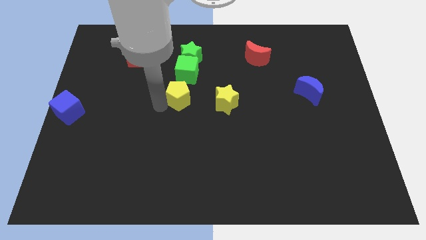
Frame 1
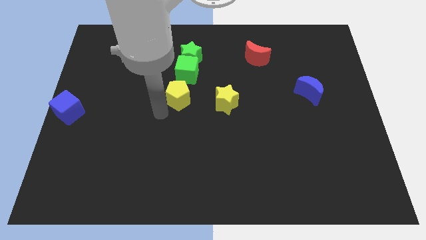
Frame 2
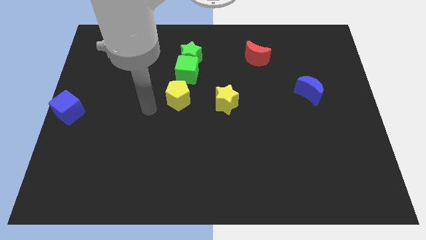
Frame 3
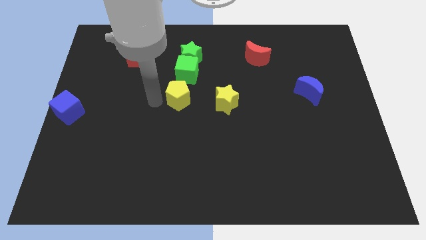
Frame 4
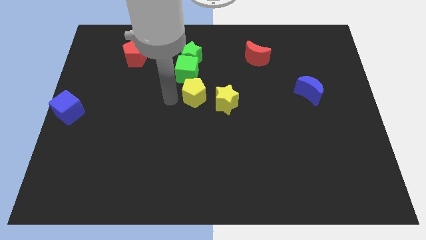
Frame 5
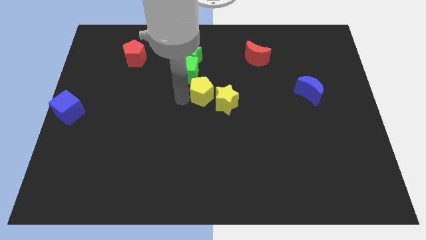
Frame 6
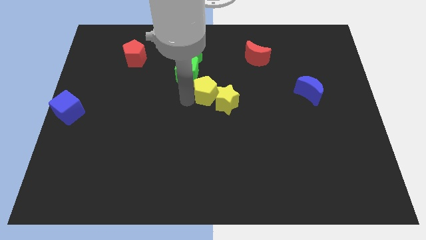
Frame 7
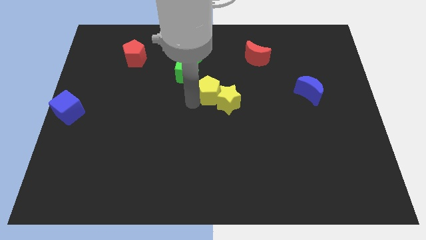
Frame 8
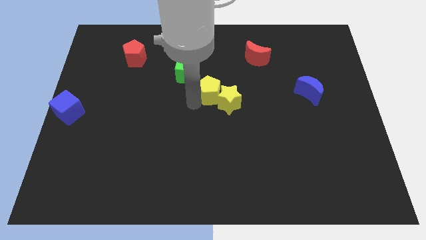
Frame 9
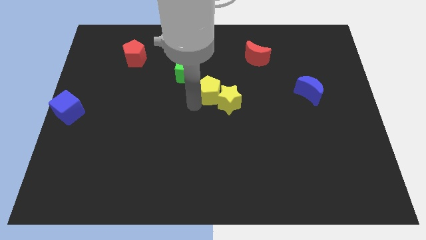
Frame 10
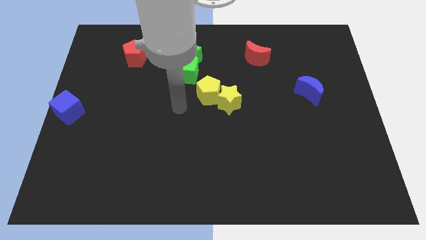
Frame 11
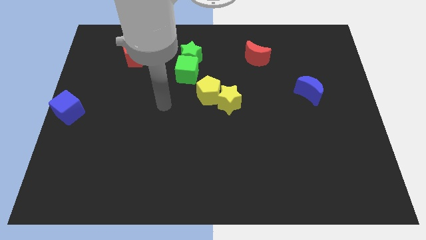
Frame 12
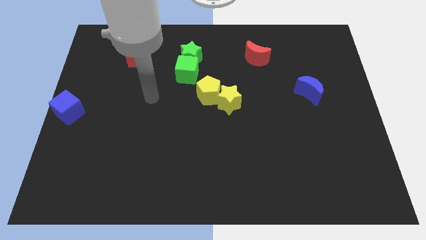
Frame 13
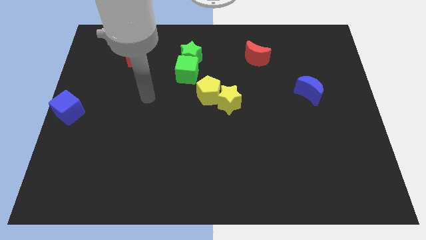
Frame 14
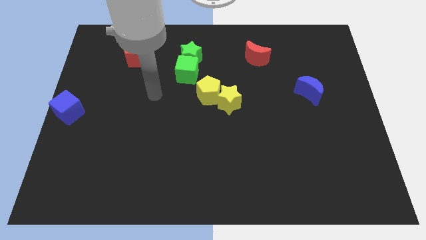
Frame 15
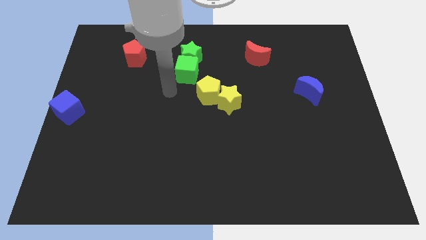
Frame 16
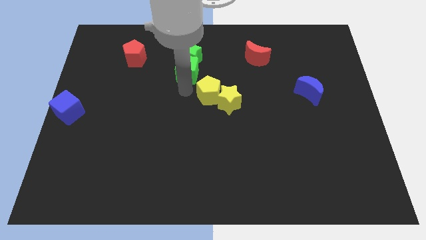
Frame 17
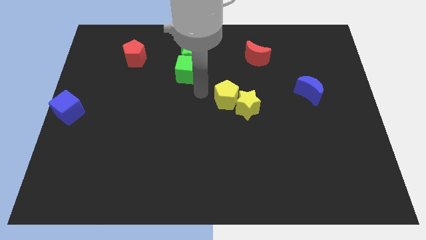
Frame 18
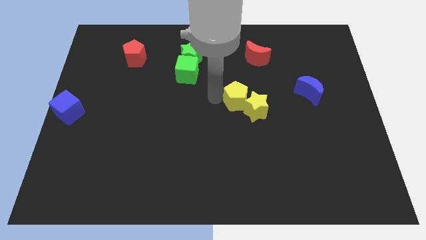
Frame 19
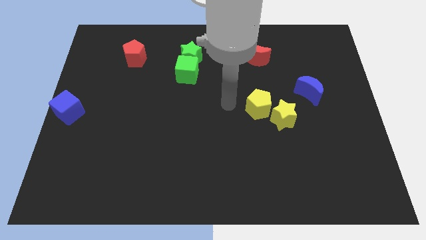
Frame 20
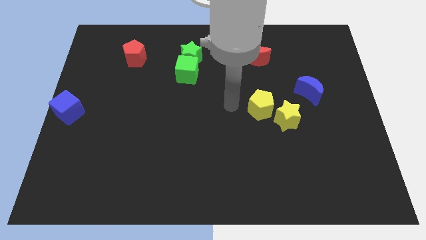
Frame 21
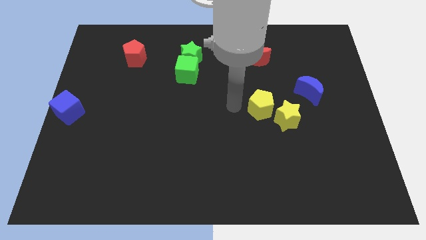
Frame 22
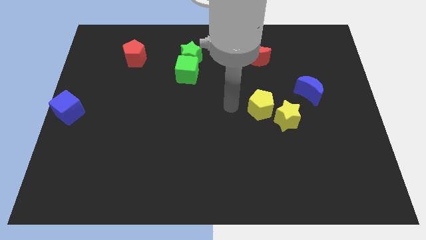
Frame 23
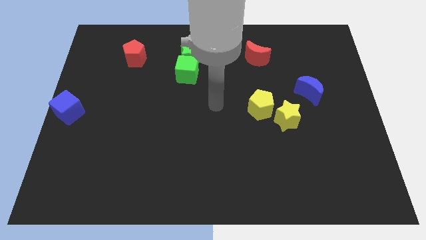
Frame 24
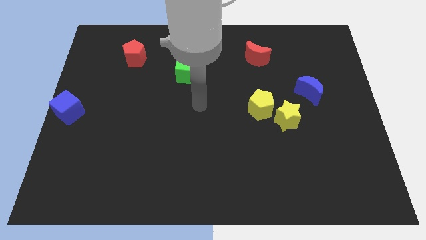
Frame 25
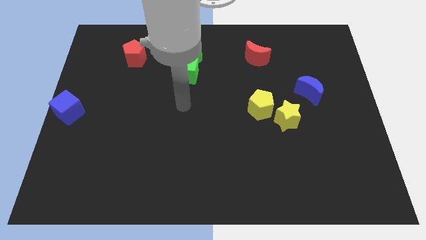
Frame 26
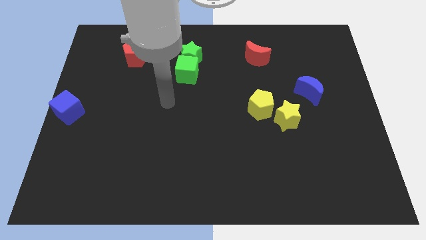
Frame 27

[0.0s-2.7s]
push the yellow blocks towards the bottom right corner of the board

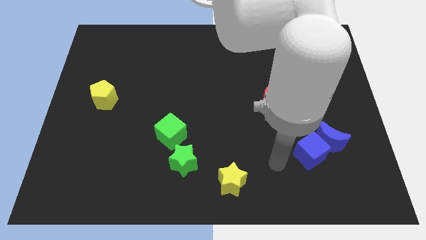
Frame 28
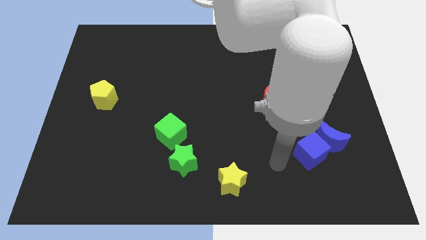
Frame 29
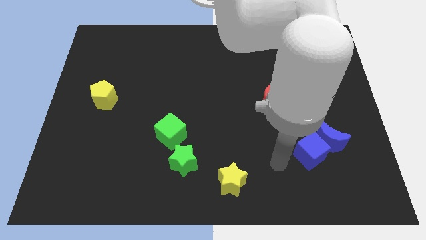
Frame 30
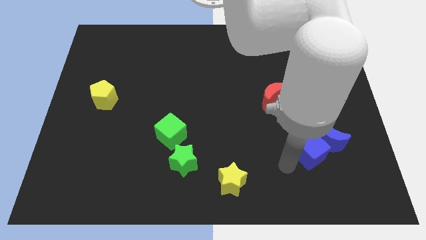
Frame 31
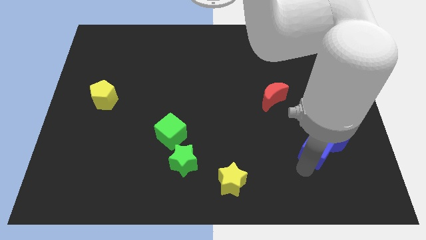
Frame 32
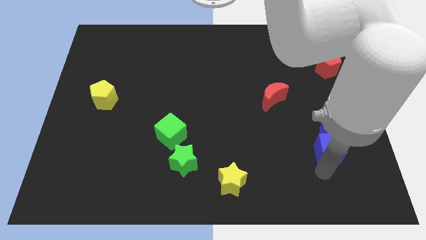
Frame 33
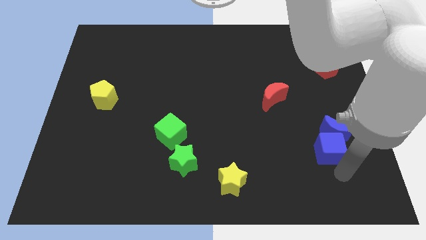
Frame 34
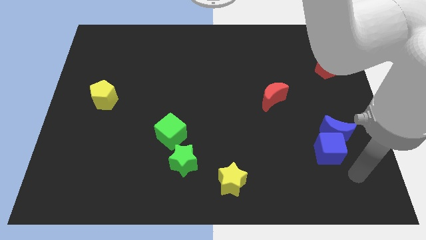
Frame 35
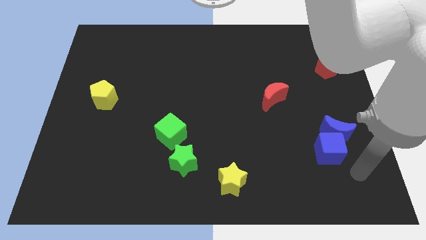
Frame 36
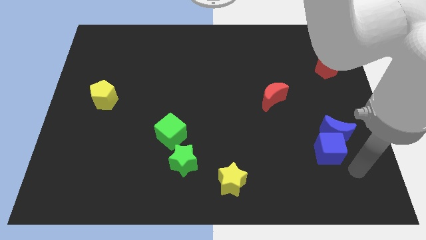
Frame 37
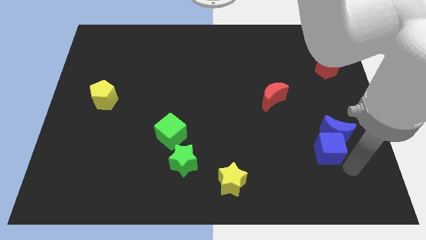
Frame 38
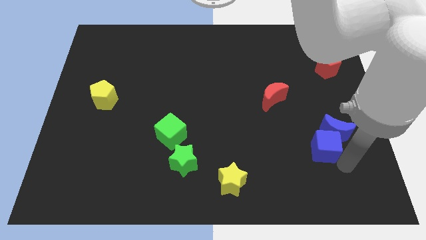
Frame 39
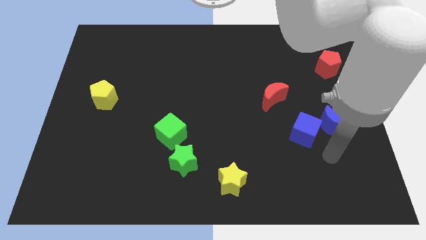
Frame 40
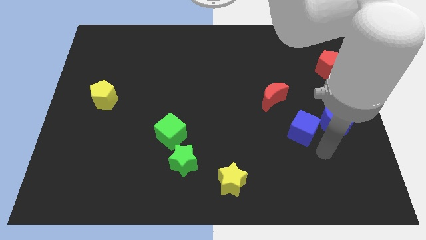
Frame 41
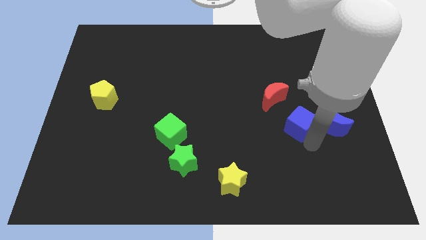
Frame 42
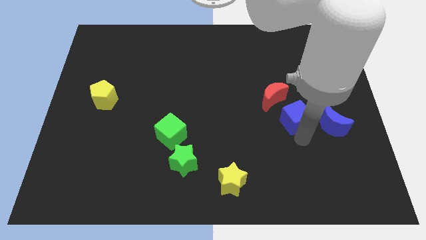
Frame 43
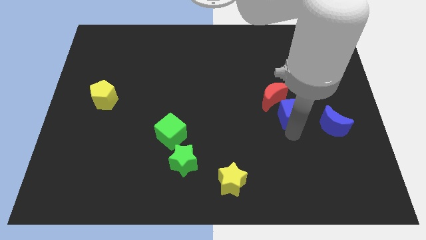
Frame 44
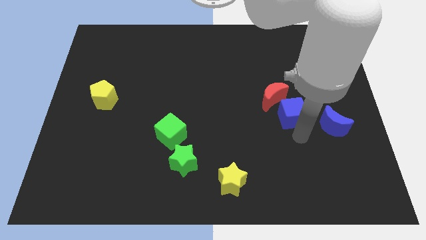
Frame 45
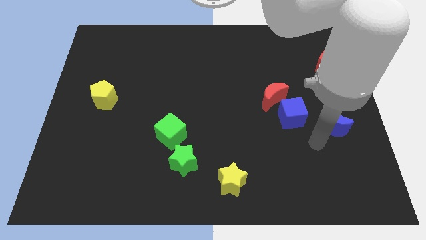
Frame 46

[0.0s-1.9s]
move the blue cube away from the blue moon

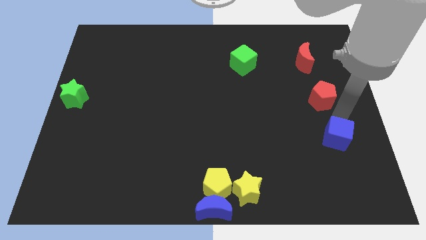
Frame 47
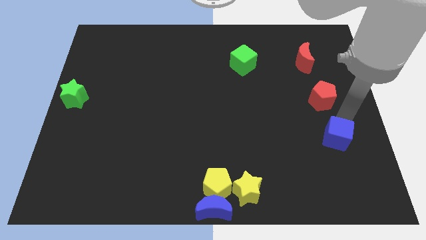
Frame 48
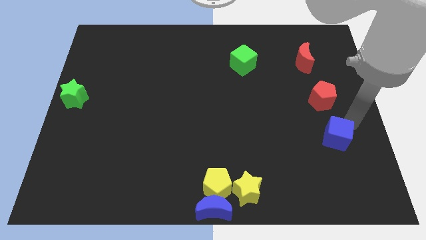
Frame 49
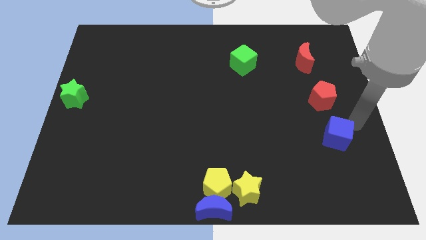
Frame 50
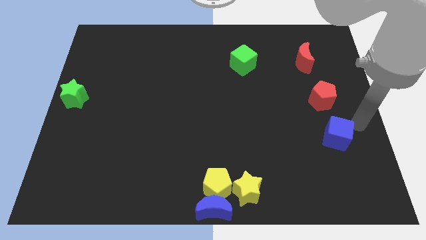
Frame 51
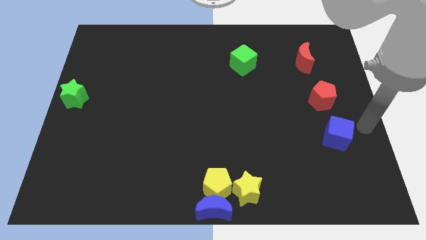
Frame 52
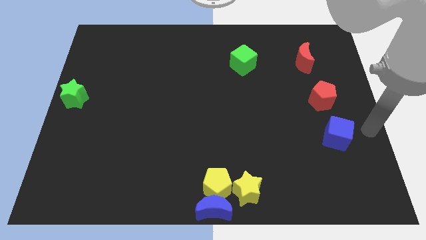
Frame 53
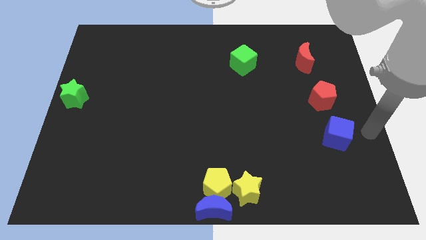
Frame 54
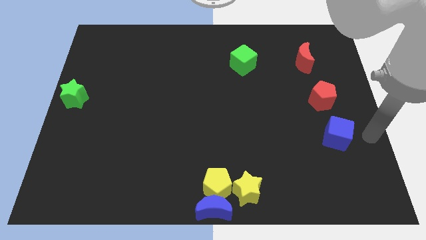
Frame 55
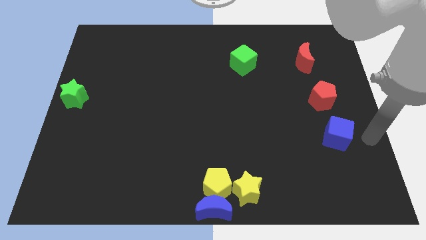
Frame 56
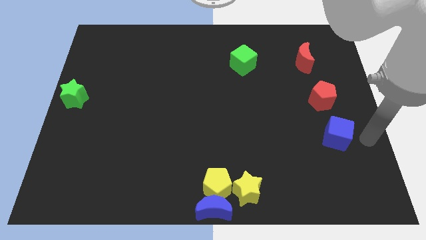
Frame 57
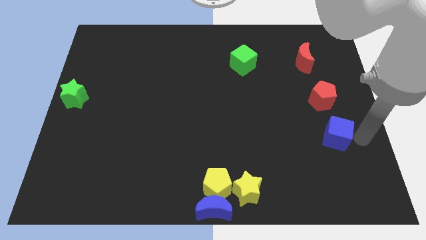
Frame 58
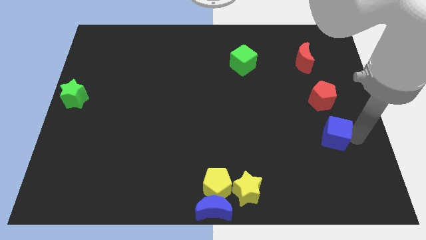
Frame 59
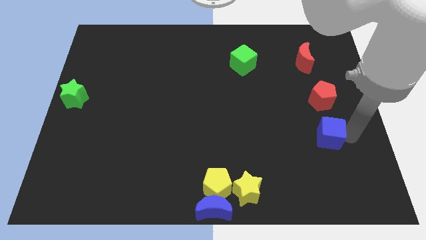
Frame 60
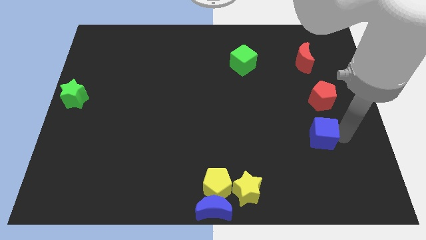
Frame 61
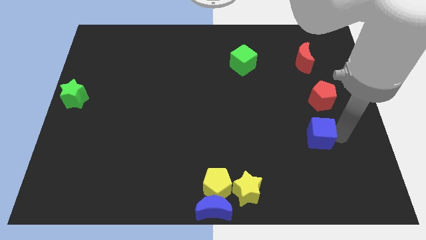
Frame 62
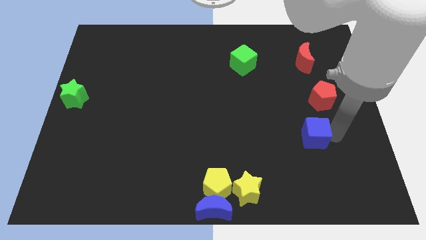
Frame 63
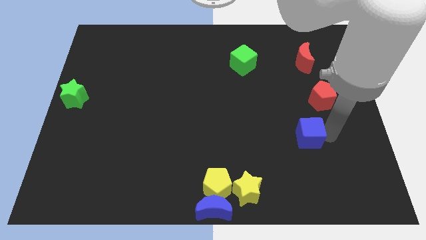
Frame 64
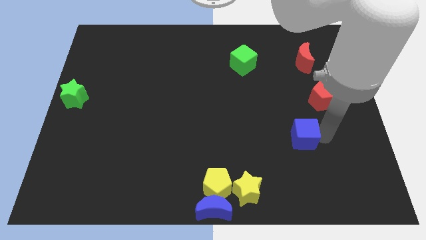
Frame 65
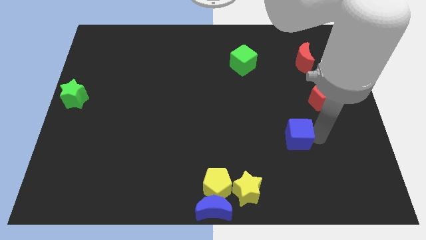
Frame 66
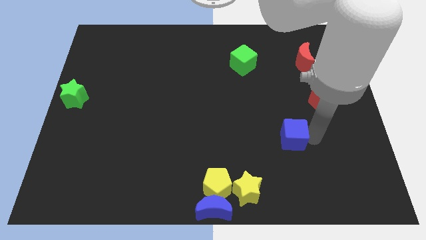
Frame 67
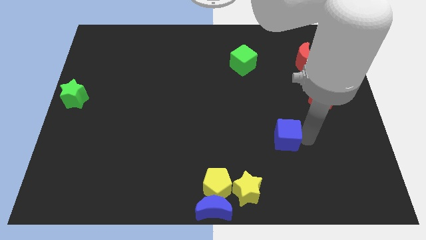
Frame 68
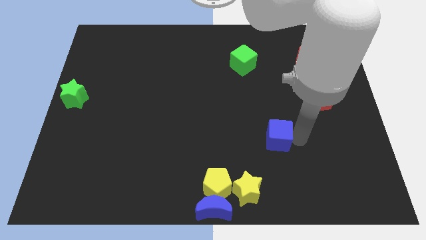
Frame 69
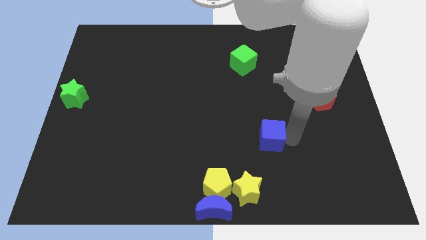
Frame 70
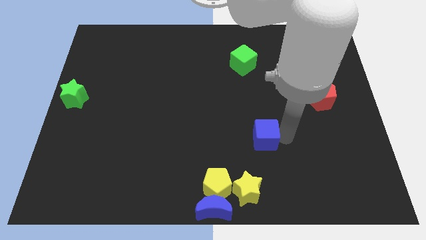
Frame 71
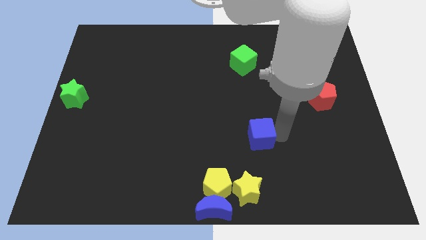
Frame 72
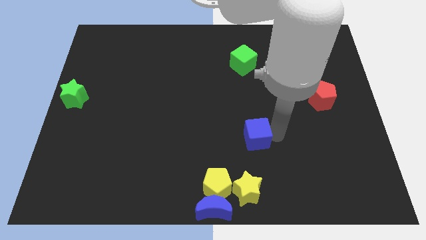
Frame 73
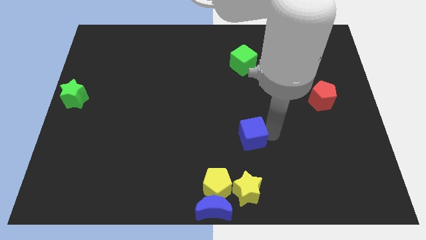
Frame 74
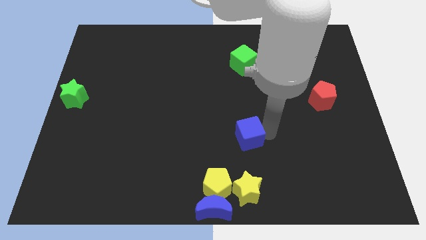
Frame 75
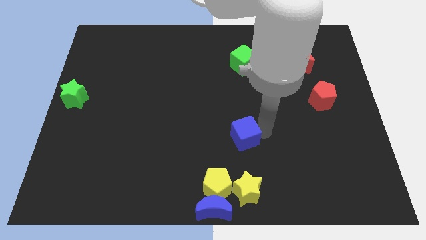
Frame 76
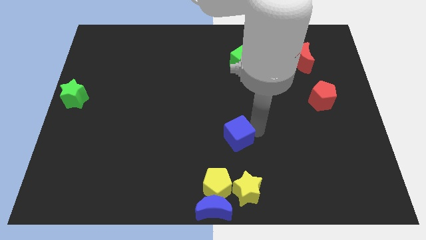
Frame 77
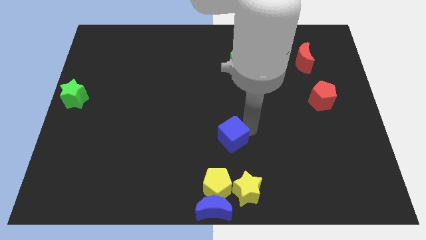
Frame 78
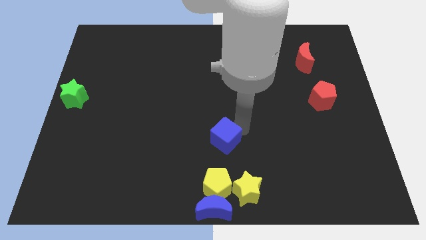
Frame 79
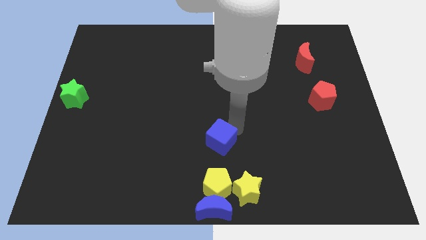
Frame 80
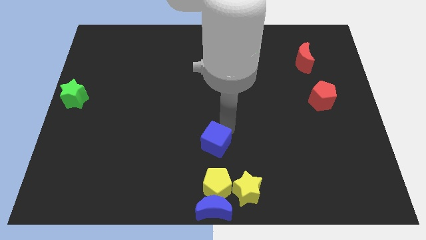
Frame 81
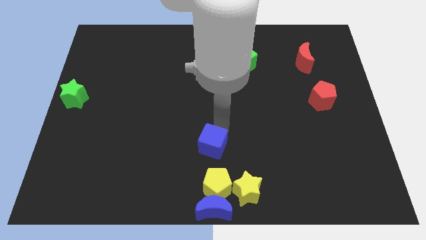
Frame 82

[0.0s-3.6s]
place the blue cube above the yellow pentagon

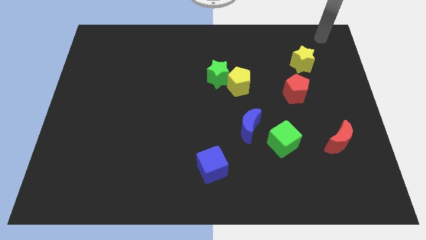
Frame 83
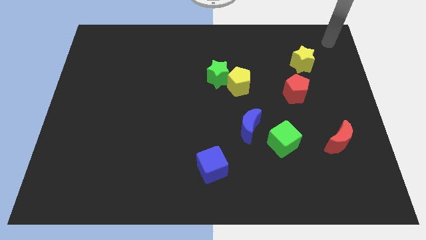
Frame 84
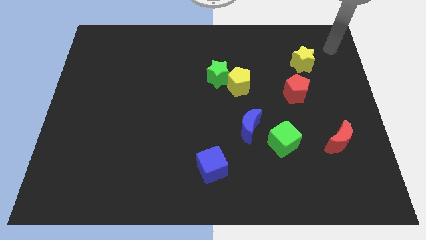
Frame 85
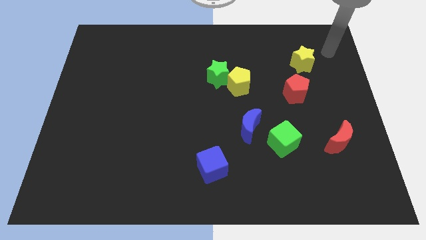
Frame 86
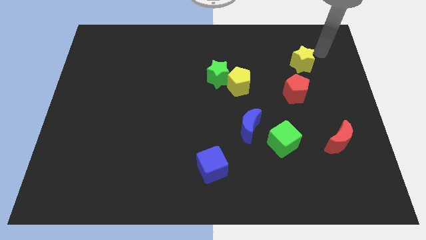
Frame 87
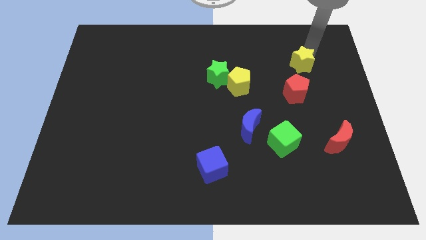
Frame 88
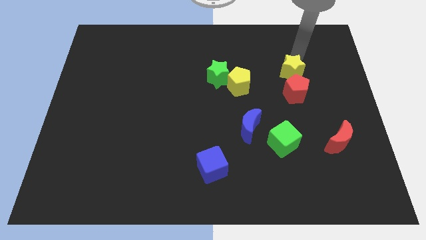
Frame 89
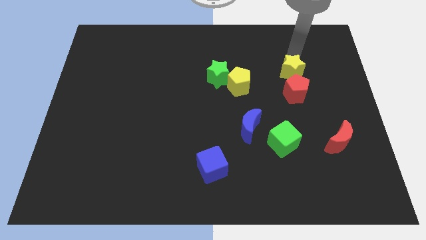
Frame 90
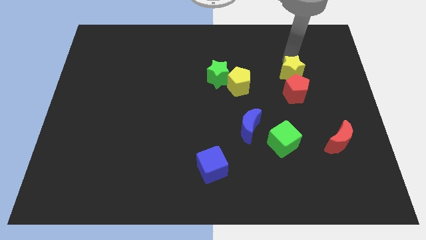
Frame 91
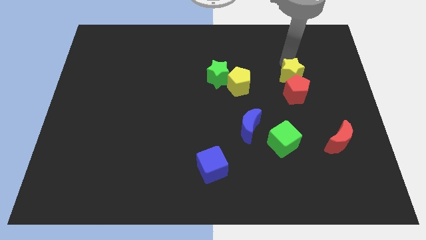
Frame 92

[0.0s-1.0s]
move the yellow star close to the top of the red pentagon
